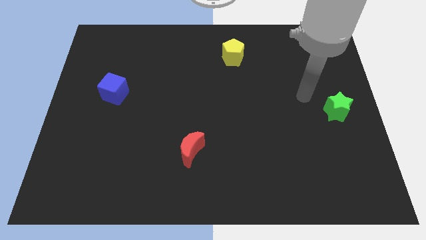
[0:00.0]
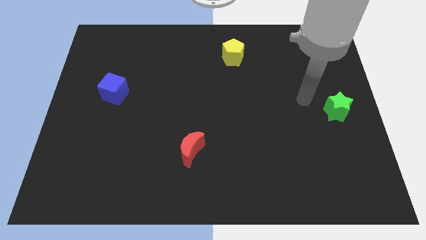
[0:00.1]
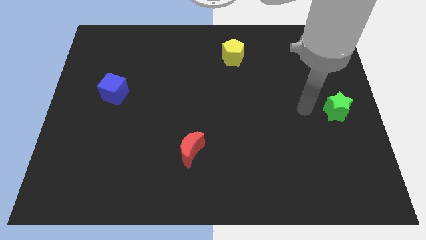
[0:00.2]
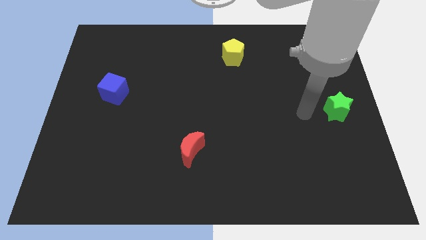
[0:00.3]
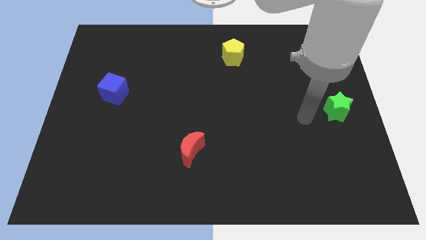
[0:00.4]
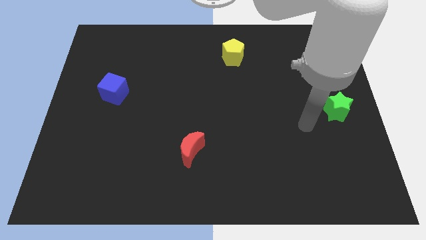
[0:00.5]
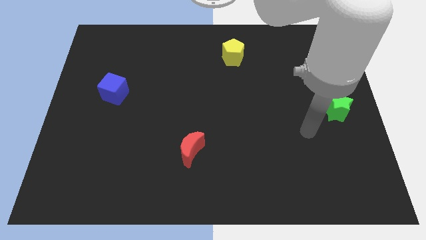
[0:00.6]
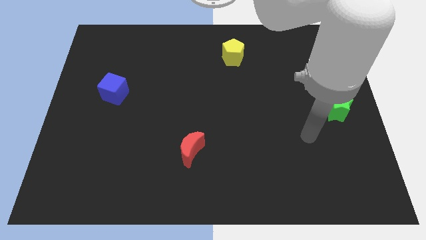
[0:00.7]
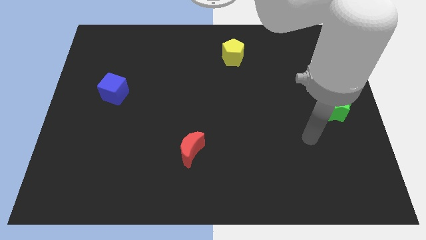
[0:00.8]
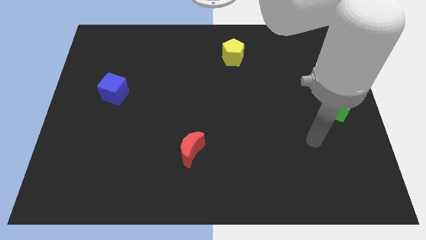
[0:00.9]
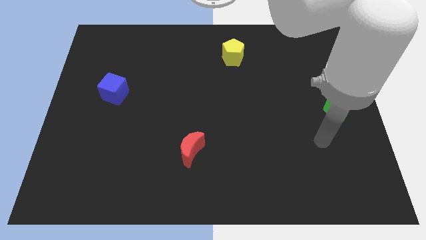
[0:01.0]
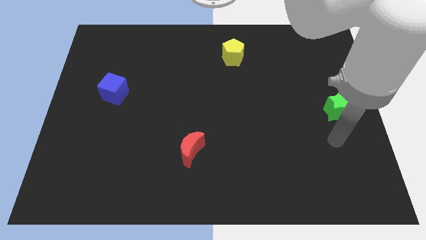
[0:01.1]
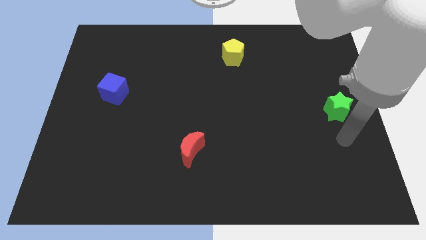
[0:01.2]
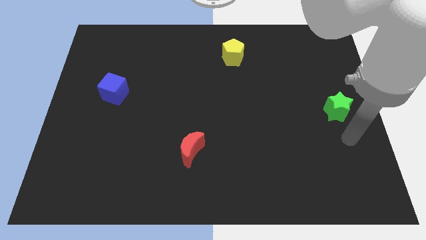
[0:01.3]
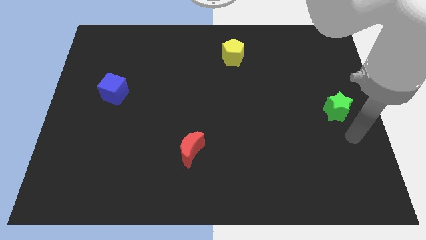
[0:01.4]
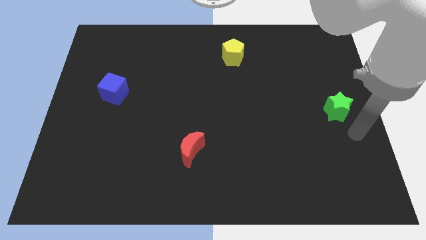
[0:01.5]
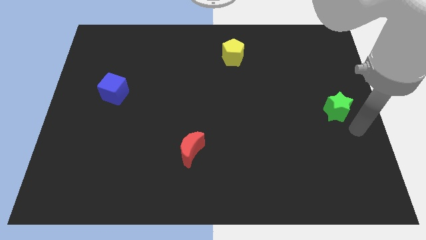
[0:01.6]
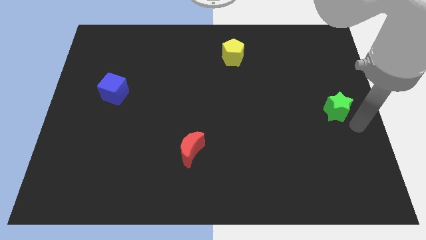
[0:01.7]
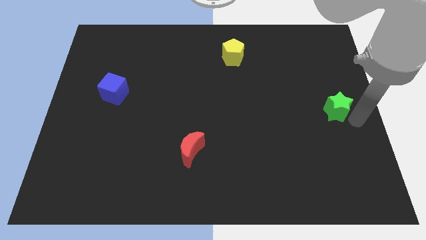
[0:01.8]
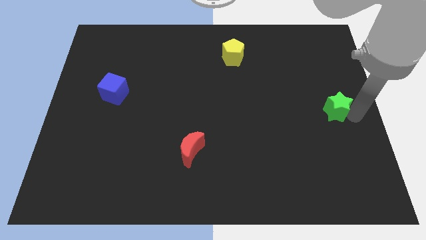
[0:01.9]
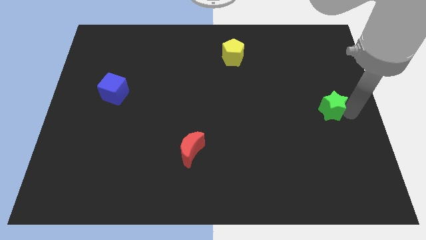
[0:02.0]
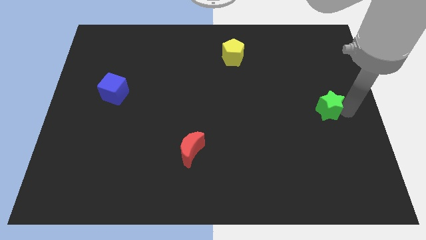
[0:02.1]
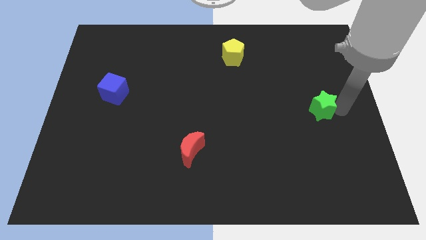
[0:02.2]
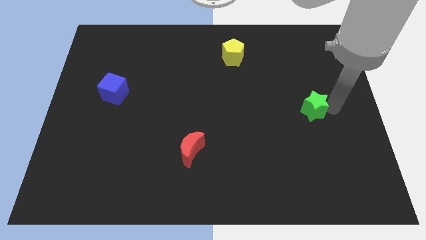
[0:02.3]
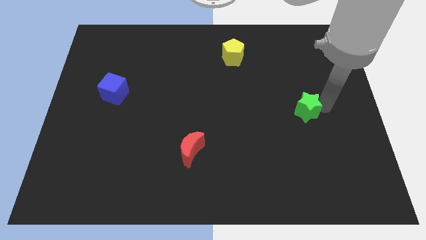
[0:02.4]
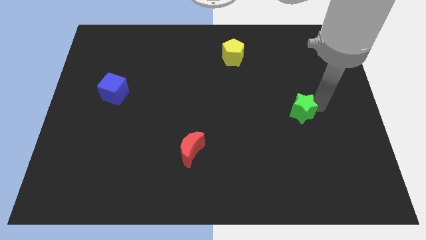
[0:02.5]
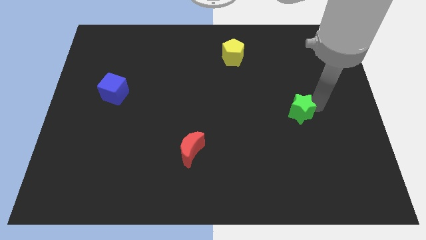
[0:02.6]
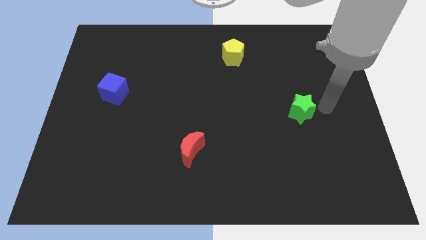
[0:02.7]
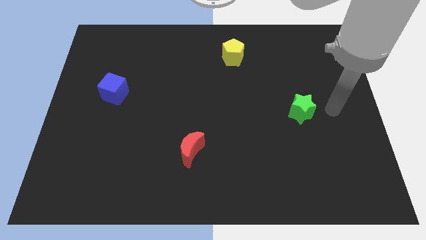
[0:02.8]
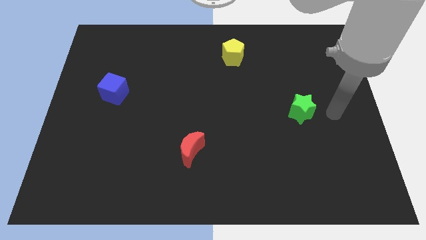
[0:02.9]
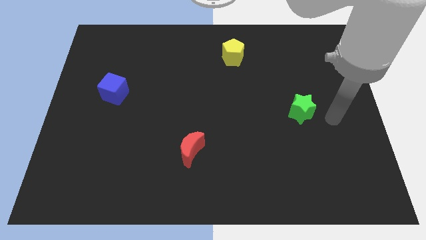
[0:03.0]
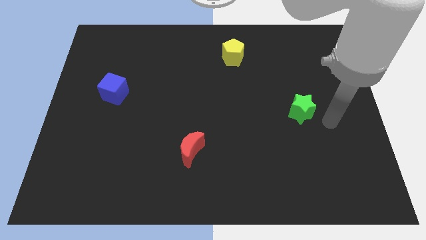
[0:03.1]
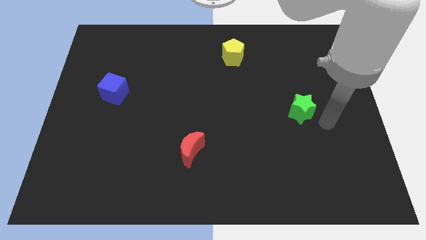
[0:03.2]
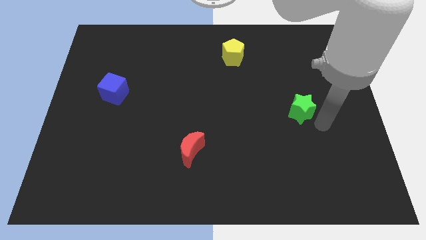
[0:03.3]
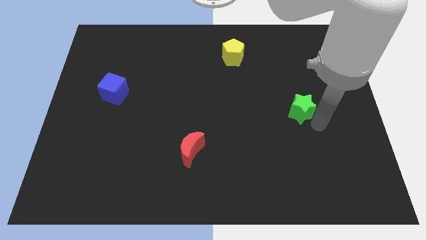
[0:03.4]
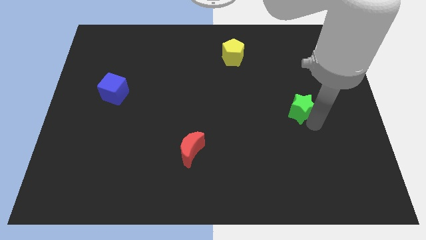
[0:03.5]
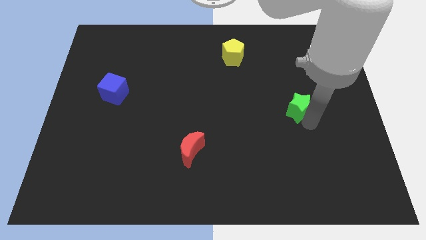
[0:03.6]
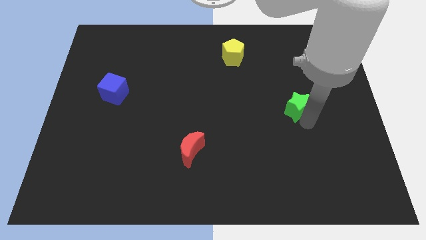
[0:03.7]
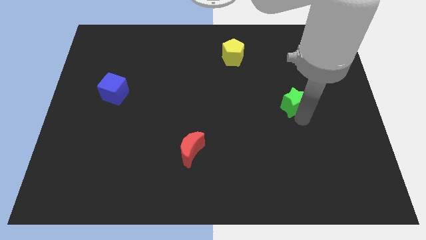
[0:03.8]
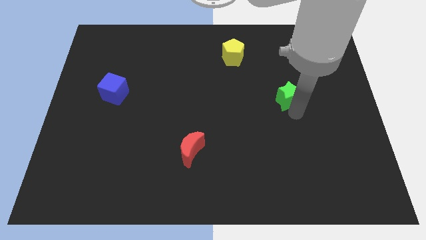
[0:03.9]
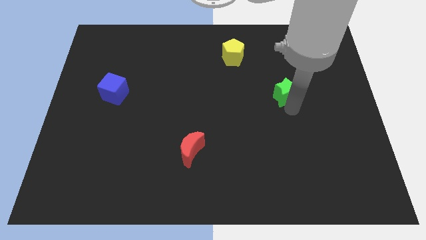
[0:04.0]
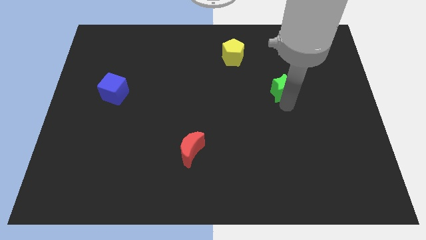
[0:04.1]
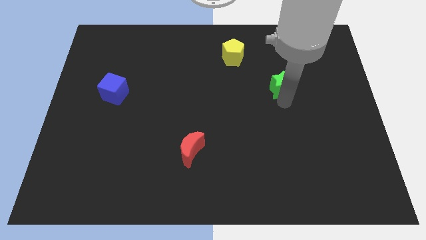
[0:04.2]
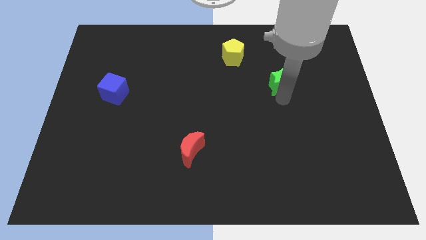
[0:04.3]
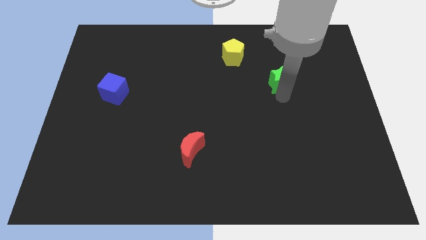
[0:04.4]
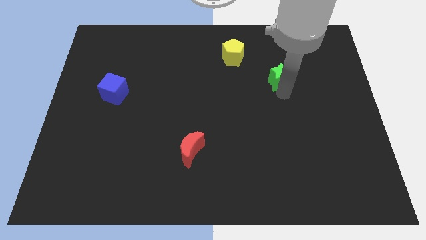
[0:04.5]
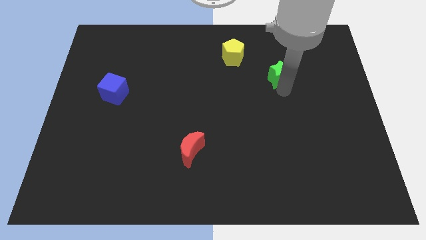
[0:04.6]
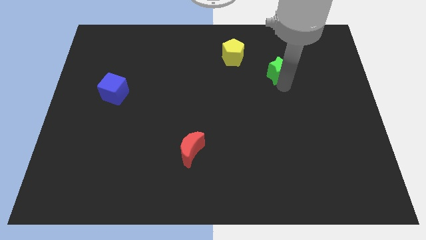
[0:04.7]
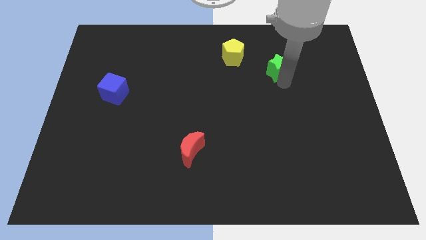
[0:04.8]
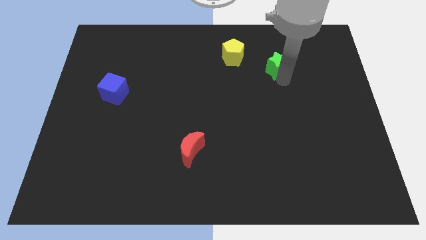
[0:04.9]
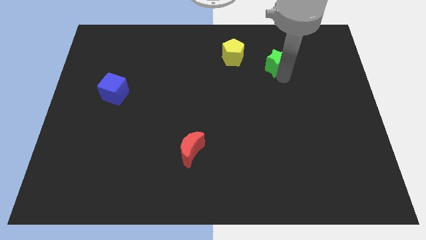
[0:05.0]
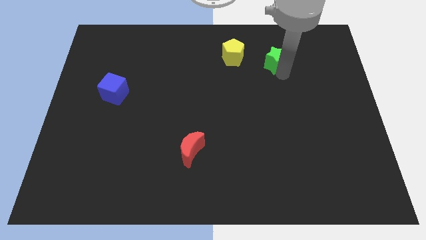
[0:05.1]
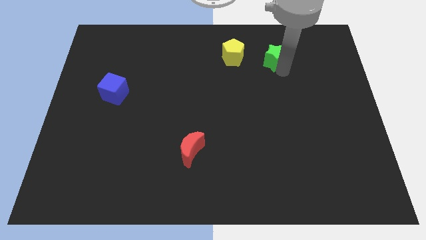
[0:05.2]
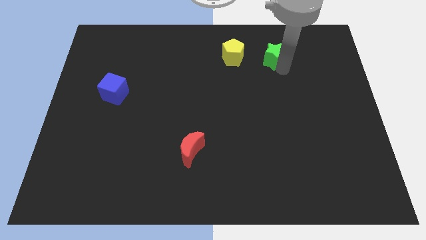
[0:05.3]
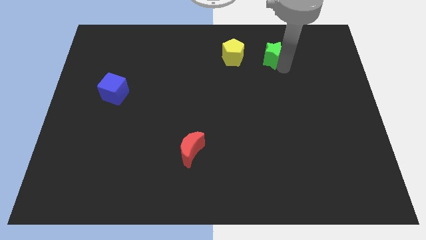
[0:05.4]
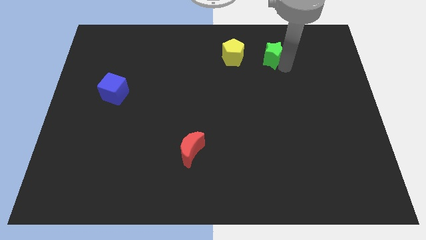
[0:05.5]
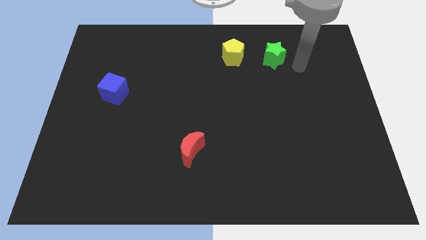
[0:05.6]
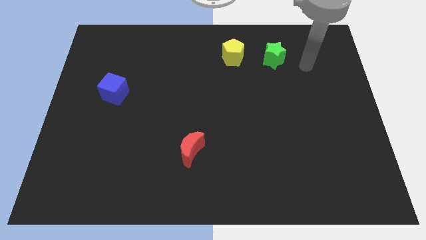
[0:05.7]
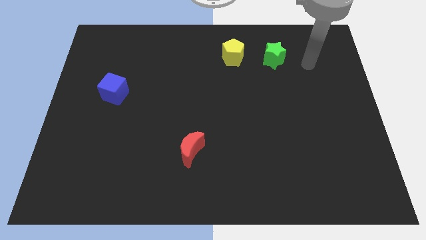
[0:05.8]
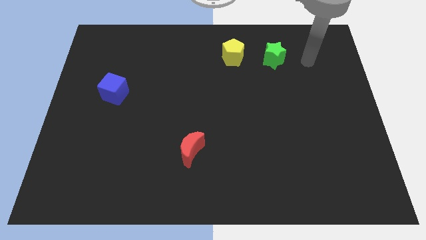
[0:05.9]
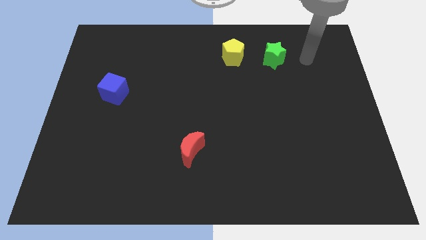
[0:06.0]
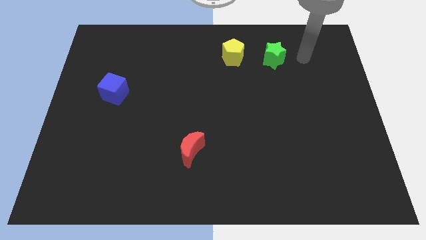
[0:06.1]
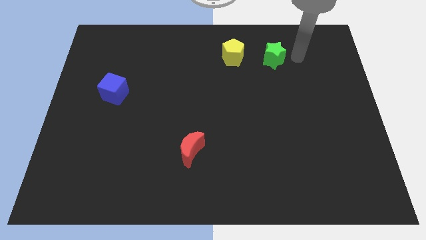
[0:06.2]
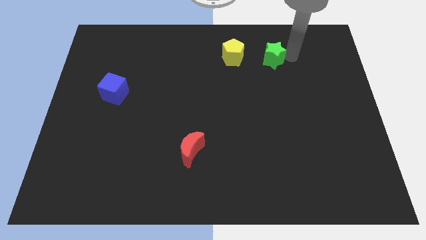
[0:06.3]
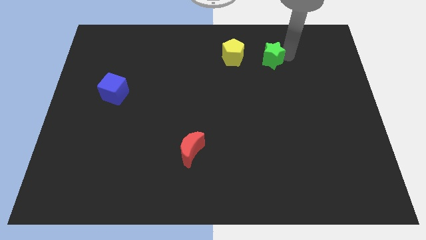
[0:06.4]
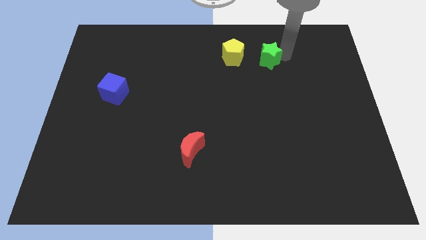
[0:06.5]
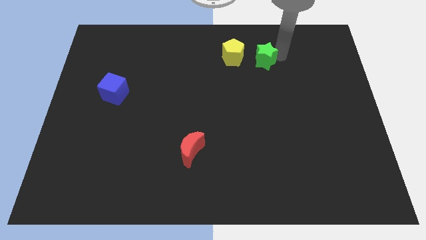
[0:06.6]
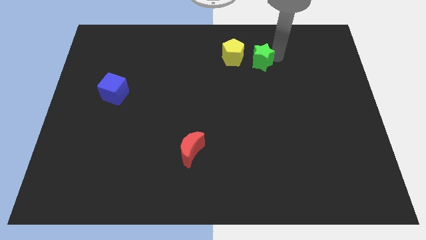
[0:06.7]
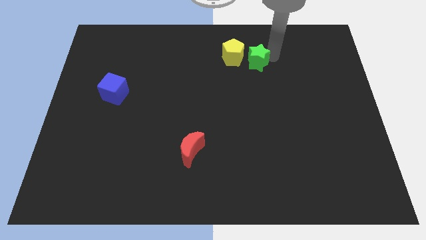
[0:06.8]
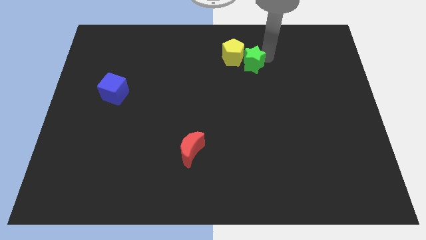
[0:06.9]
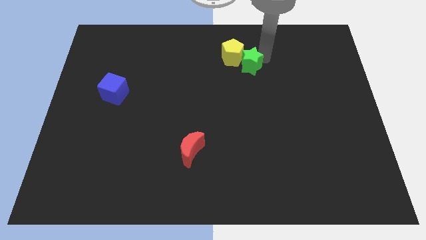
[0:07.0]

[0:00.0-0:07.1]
move the green block next to the yellow pentagon

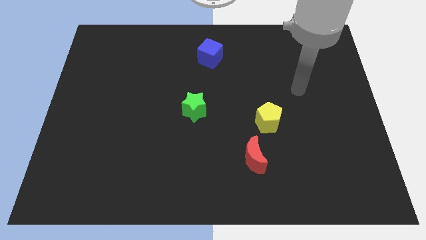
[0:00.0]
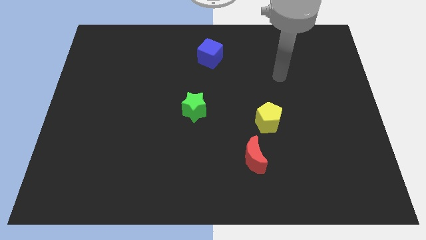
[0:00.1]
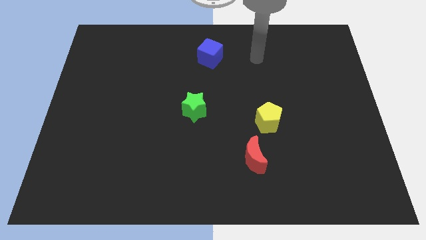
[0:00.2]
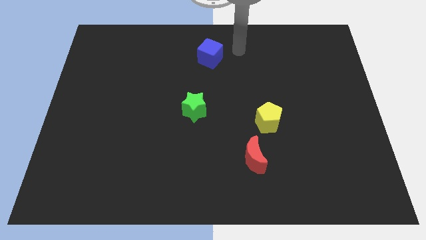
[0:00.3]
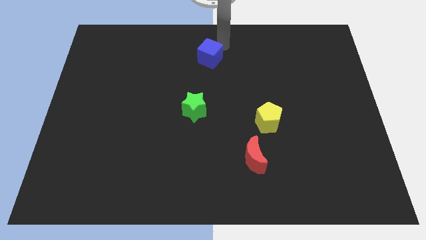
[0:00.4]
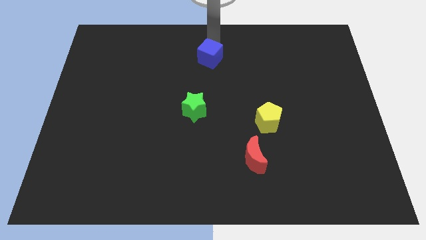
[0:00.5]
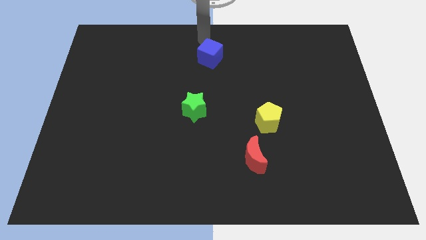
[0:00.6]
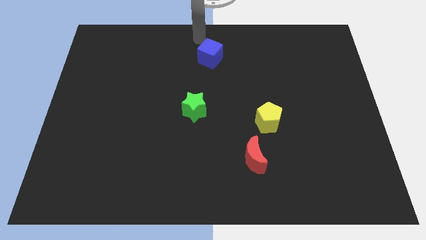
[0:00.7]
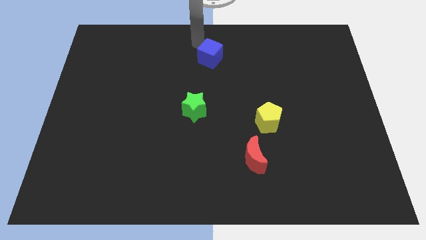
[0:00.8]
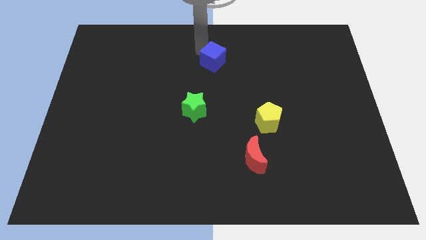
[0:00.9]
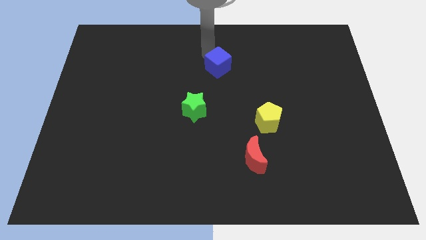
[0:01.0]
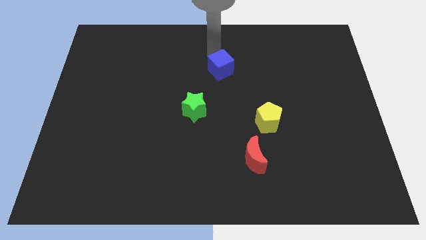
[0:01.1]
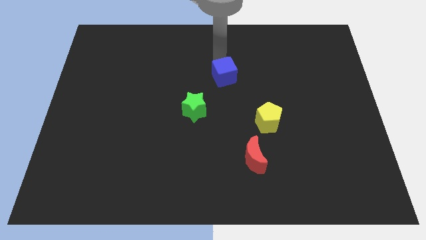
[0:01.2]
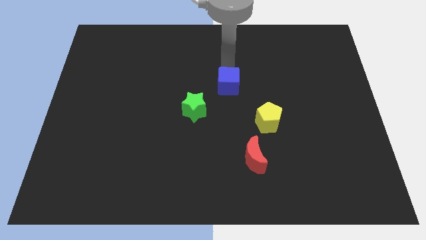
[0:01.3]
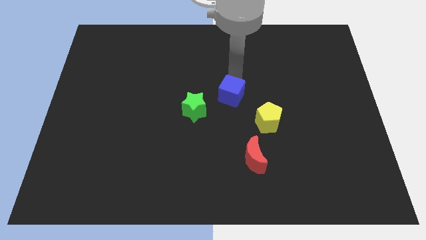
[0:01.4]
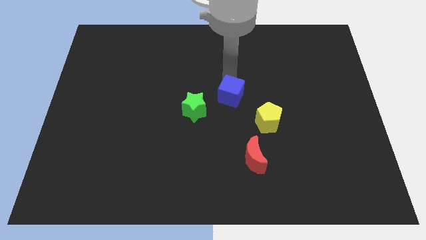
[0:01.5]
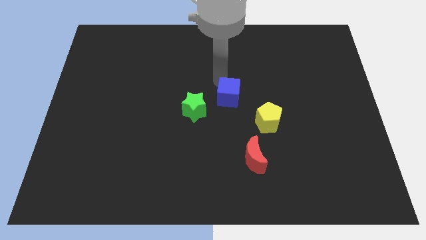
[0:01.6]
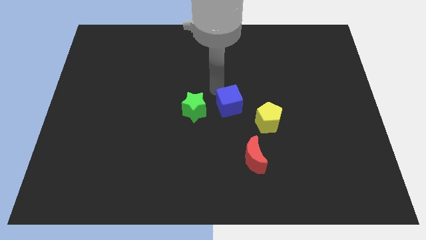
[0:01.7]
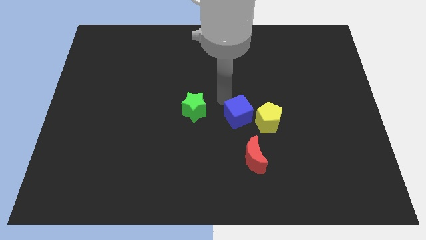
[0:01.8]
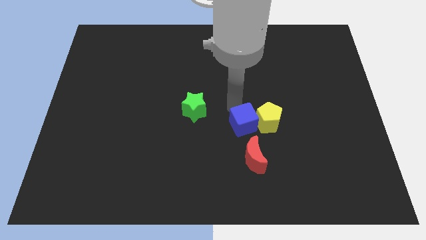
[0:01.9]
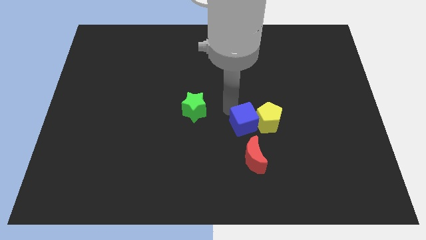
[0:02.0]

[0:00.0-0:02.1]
move the cube to the pentagon
